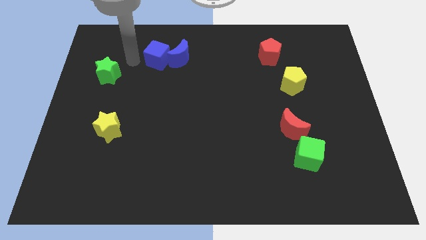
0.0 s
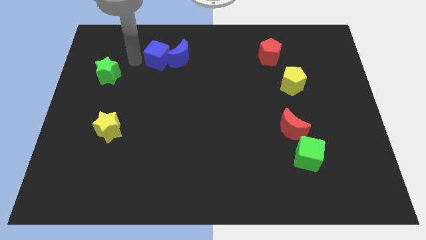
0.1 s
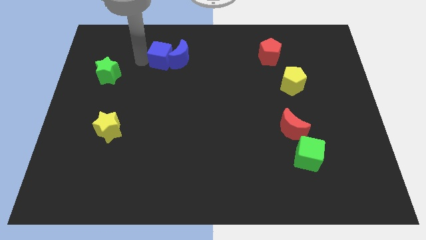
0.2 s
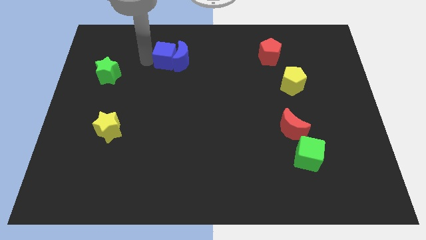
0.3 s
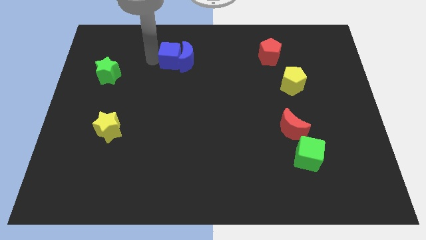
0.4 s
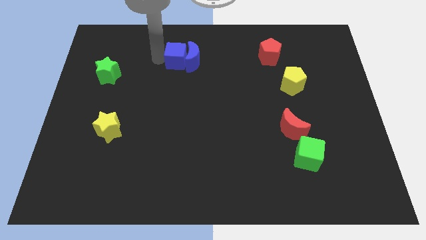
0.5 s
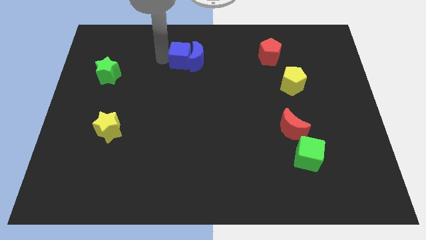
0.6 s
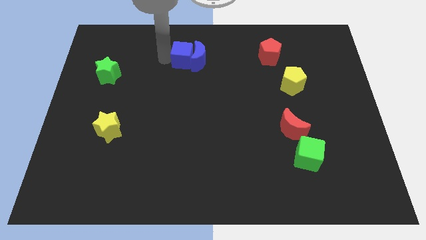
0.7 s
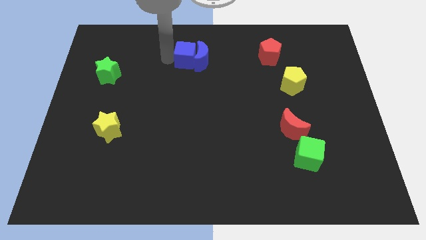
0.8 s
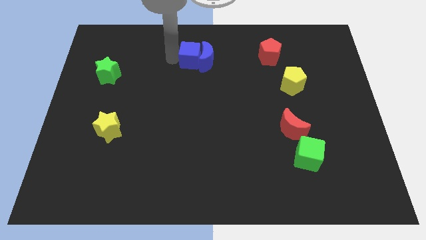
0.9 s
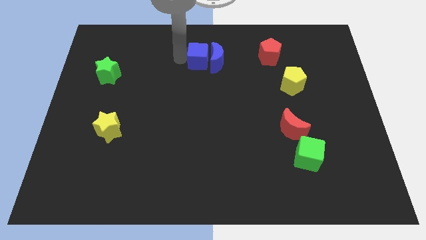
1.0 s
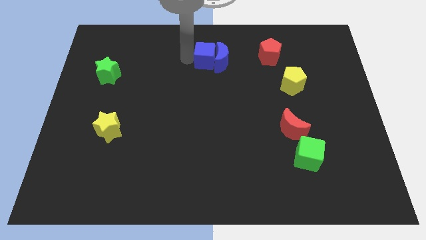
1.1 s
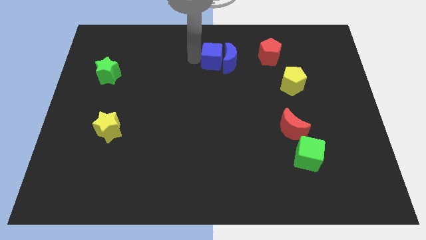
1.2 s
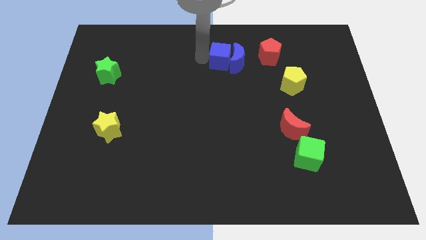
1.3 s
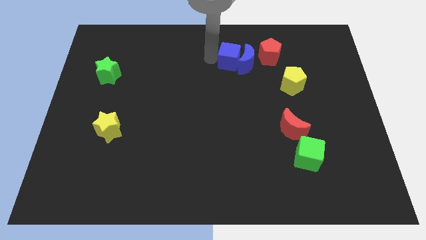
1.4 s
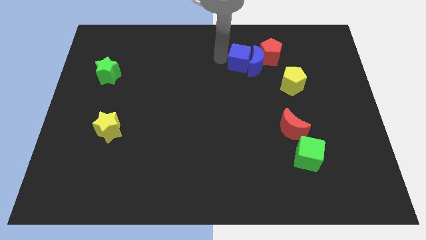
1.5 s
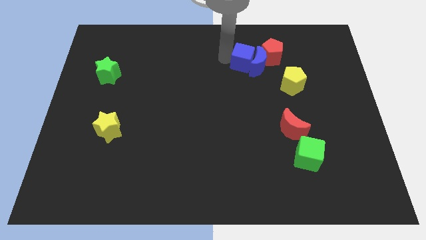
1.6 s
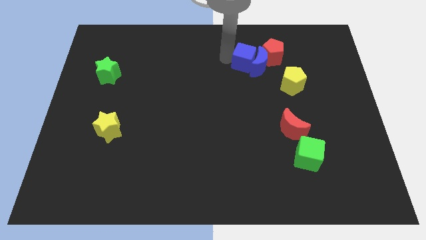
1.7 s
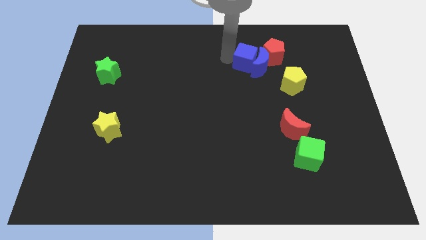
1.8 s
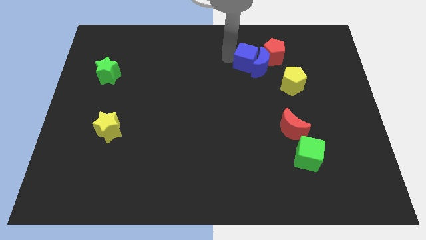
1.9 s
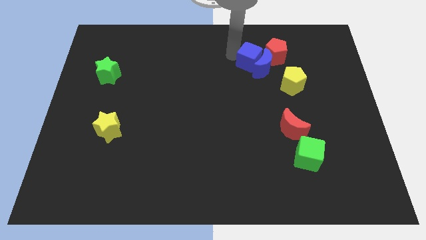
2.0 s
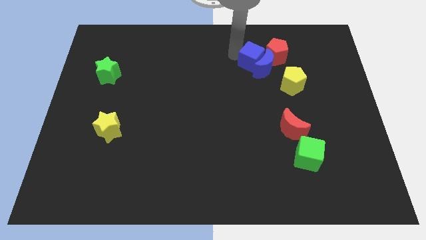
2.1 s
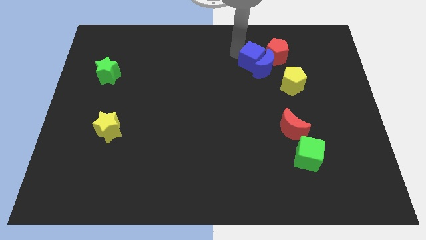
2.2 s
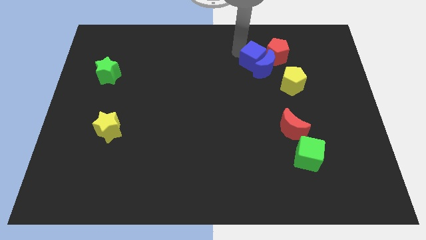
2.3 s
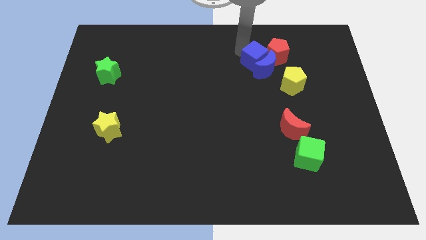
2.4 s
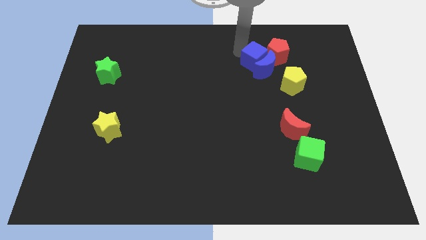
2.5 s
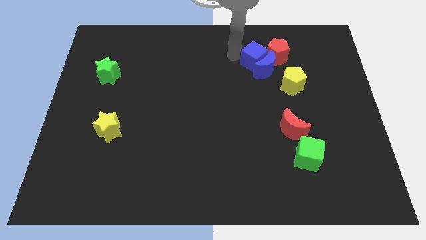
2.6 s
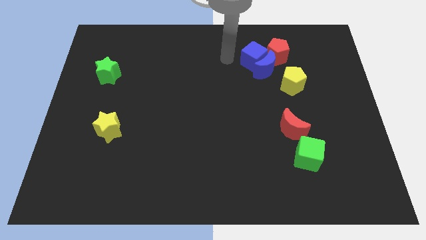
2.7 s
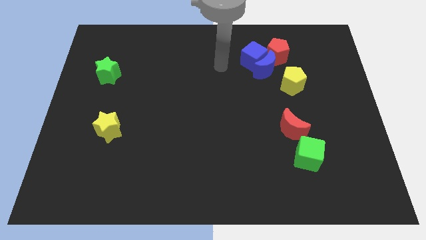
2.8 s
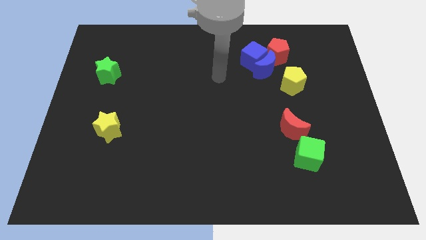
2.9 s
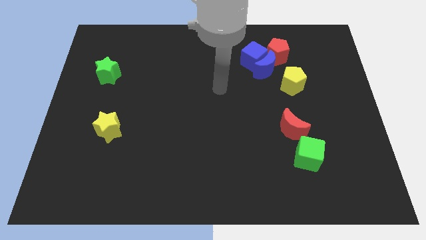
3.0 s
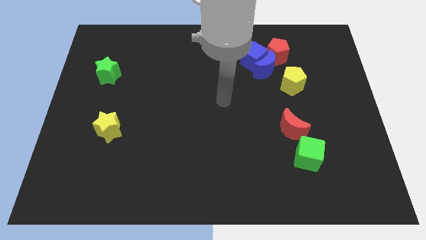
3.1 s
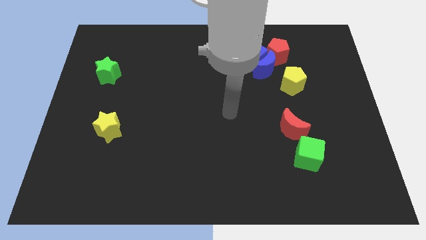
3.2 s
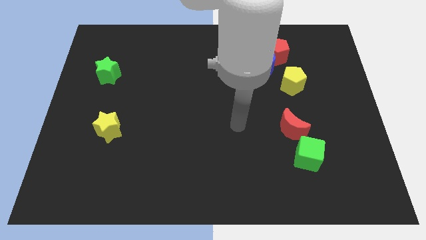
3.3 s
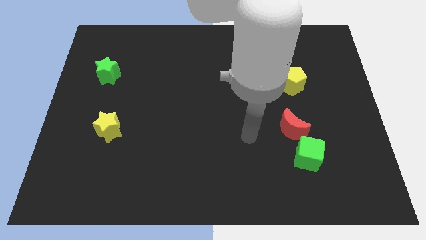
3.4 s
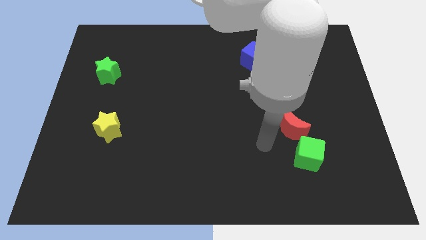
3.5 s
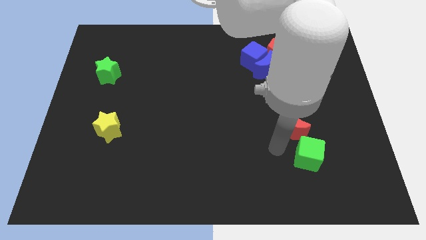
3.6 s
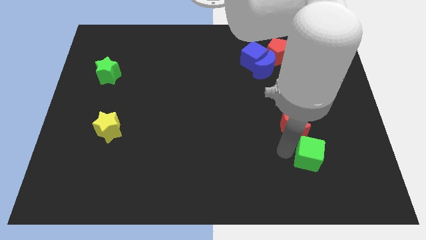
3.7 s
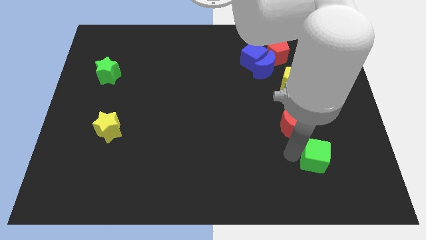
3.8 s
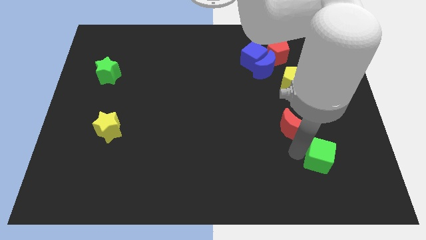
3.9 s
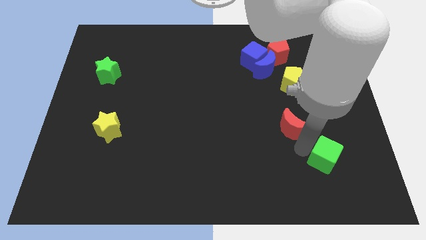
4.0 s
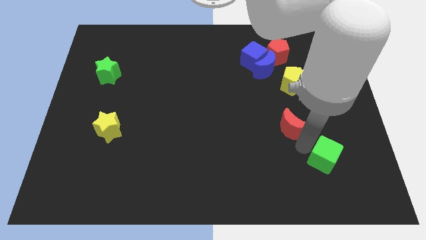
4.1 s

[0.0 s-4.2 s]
place the blue blocks towards the red pentagon

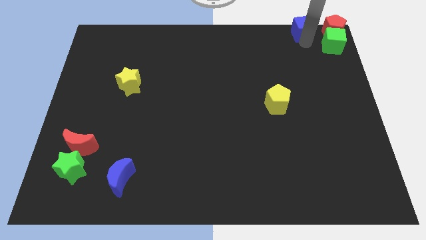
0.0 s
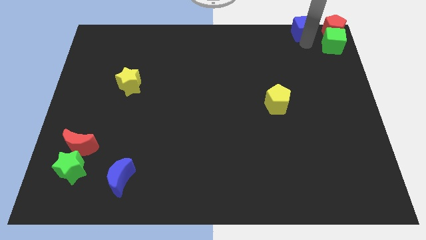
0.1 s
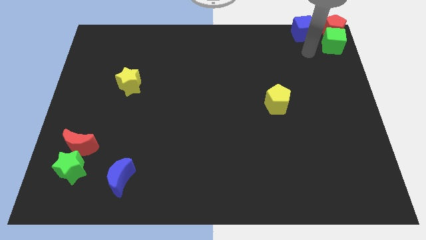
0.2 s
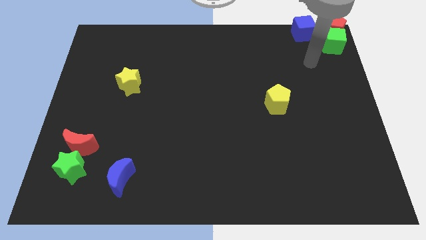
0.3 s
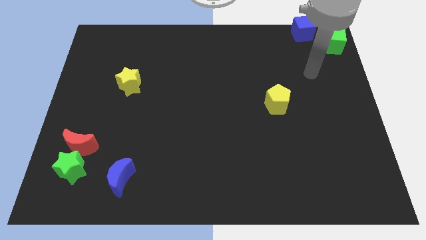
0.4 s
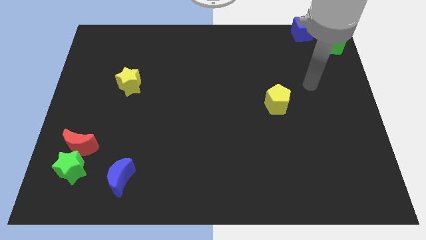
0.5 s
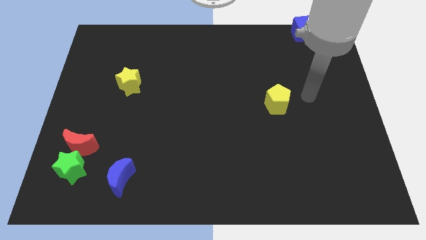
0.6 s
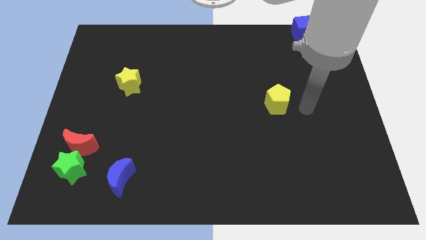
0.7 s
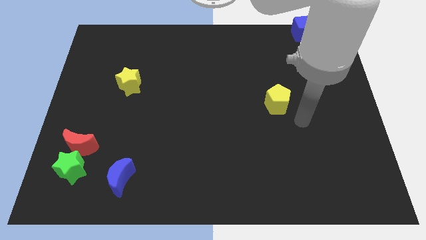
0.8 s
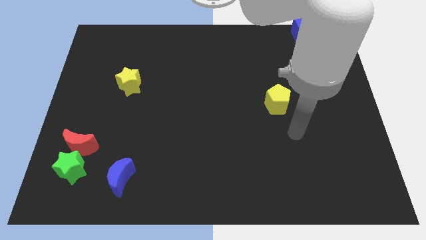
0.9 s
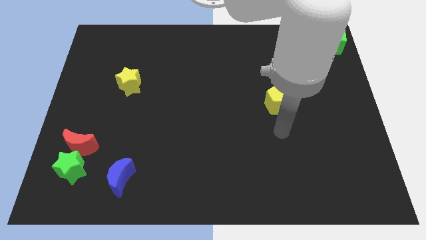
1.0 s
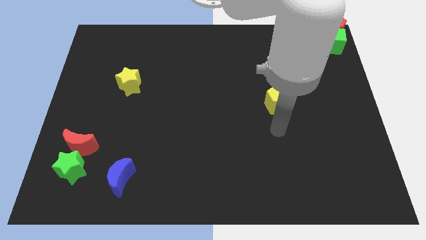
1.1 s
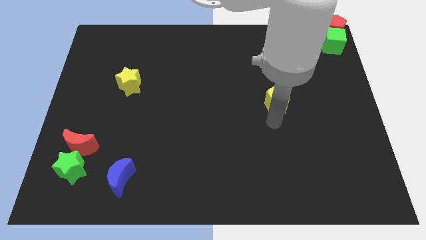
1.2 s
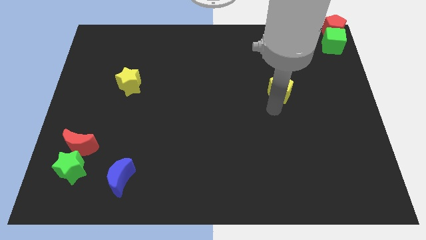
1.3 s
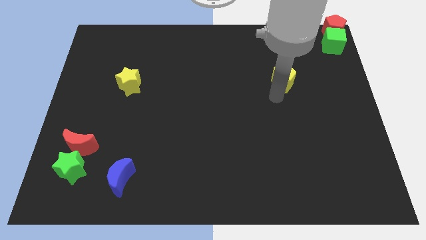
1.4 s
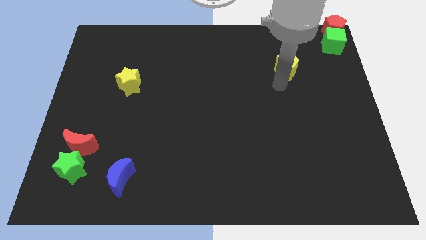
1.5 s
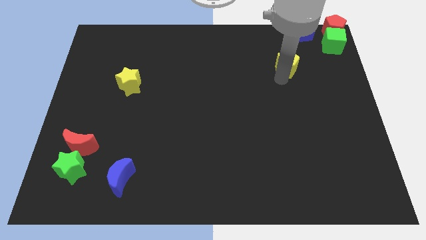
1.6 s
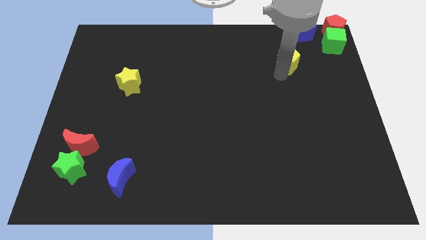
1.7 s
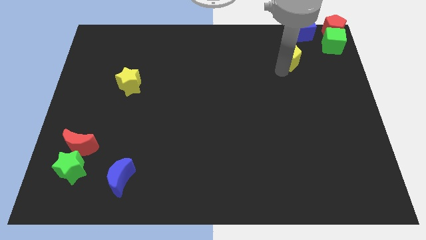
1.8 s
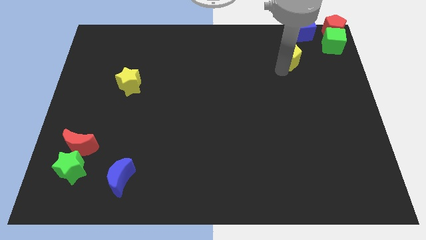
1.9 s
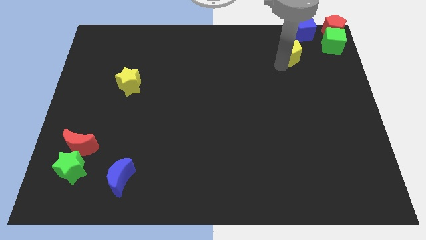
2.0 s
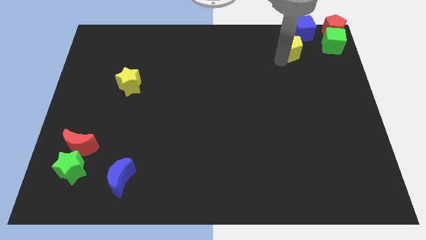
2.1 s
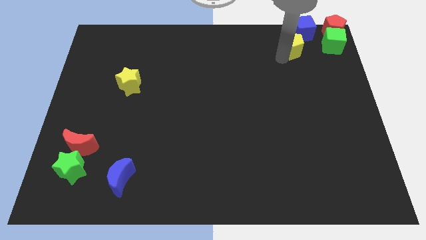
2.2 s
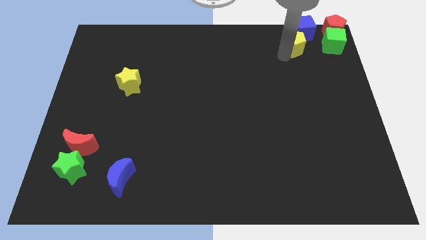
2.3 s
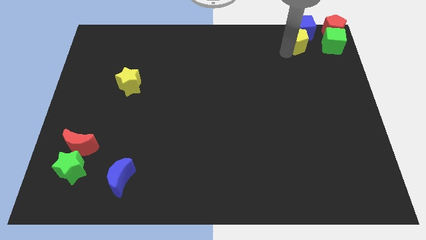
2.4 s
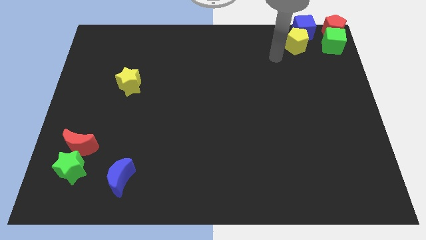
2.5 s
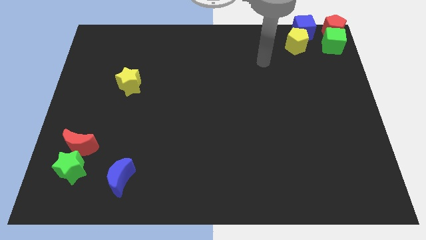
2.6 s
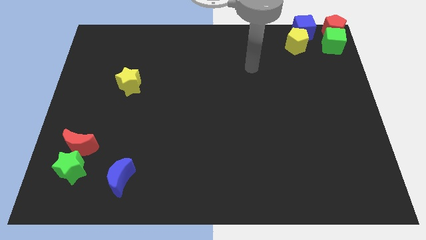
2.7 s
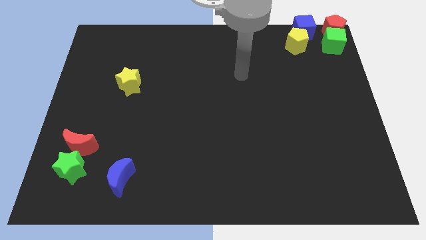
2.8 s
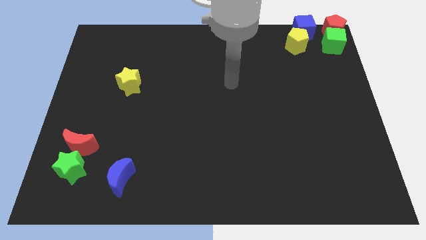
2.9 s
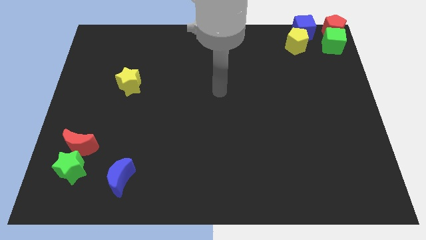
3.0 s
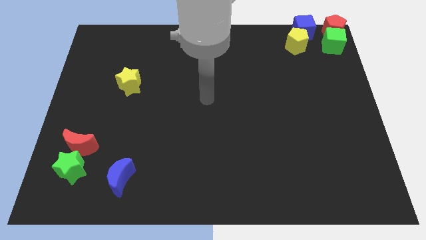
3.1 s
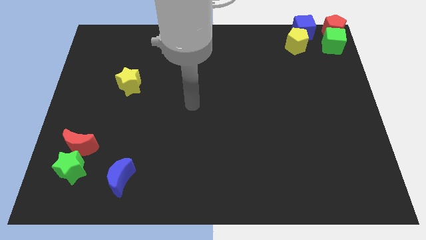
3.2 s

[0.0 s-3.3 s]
move the yellow pentagon to the bottom of the blue cube to the top right of the board

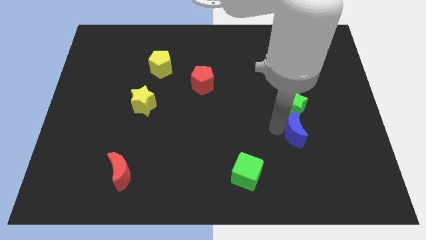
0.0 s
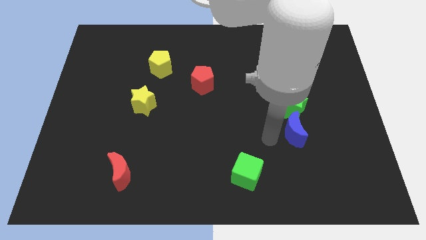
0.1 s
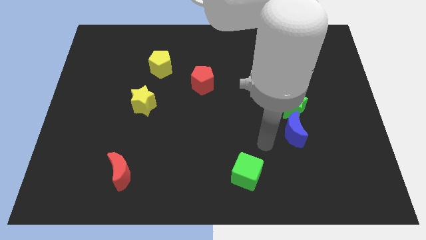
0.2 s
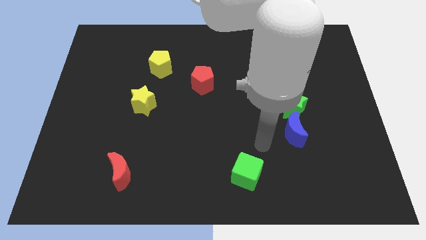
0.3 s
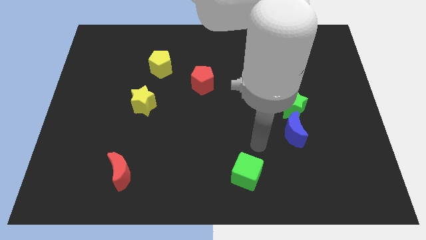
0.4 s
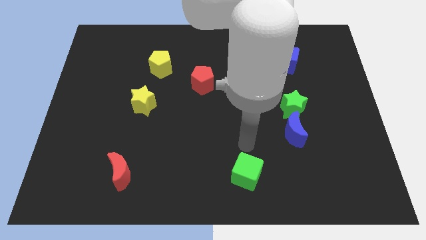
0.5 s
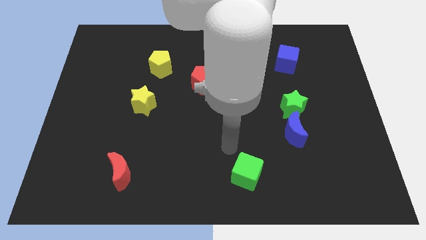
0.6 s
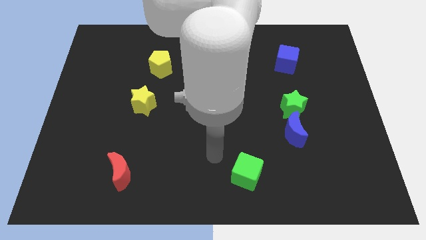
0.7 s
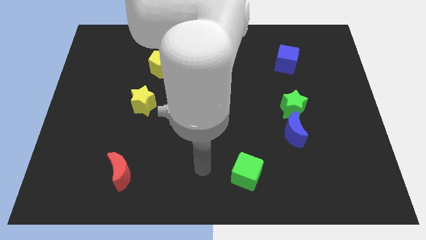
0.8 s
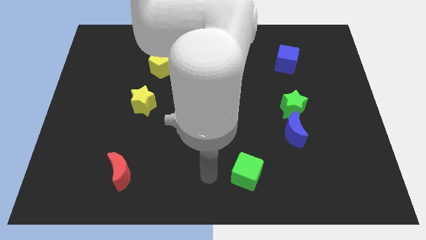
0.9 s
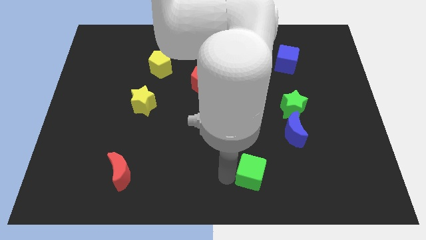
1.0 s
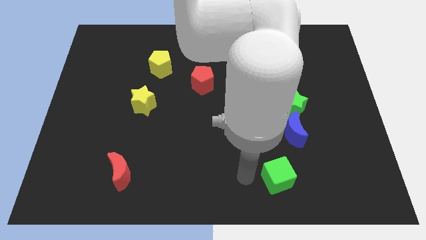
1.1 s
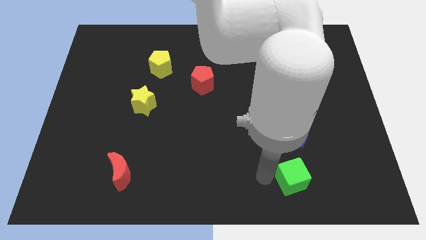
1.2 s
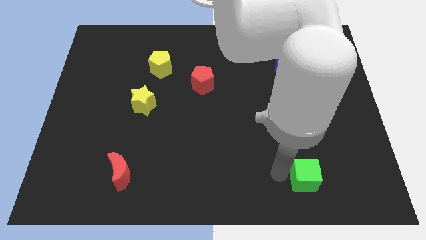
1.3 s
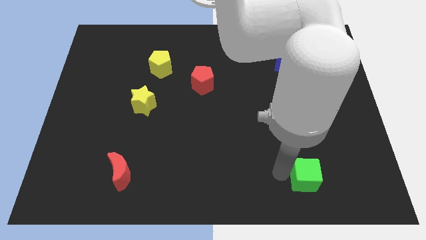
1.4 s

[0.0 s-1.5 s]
move green cube below the blue moon

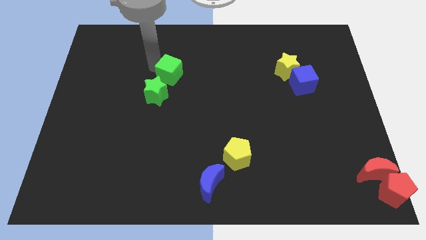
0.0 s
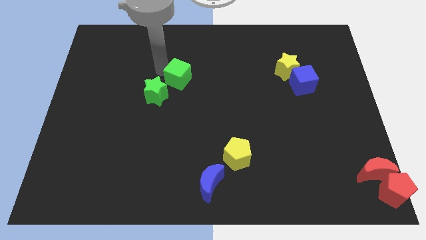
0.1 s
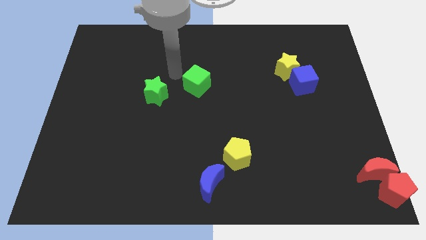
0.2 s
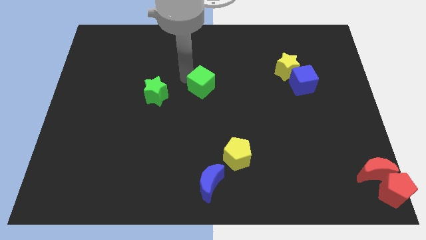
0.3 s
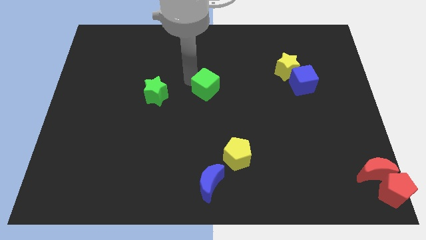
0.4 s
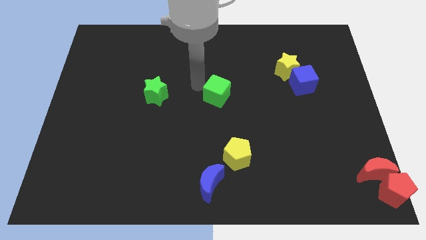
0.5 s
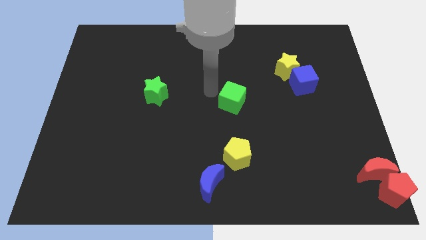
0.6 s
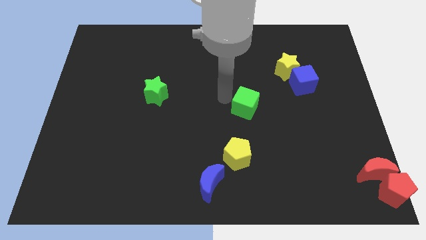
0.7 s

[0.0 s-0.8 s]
push green cube above yellow pentagon
